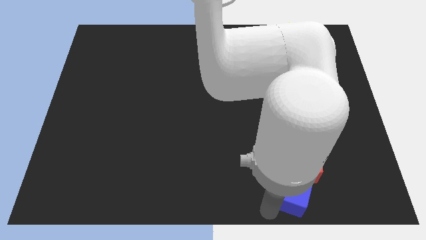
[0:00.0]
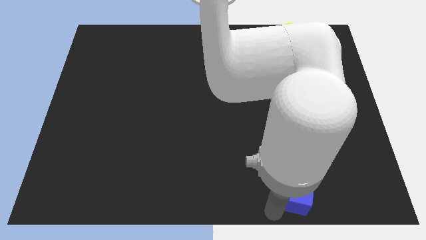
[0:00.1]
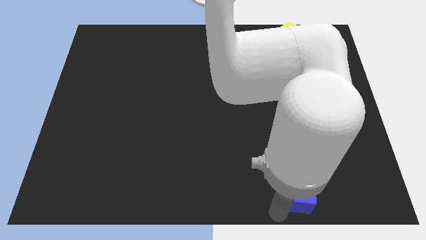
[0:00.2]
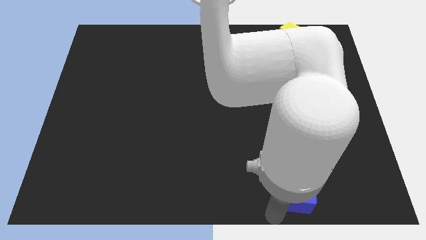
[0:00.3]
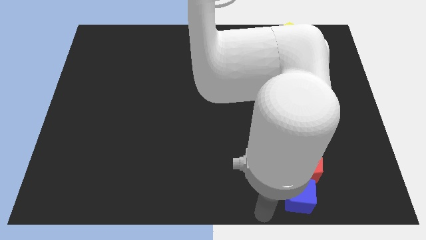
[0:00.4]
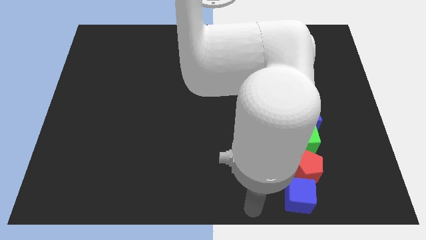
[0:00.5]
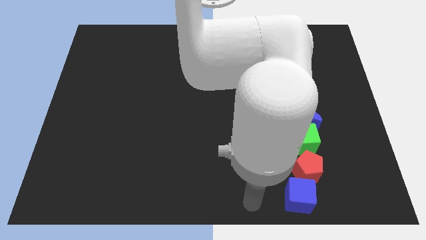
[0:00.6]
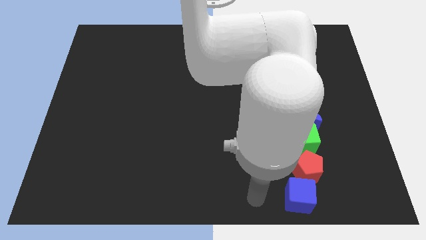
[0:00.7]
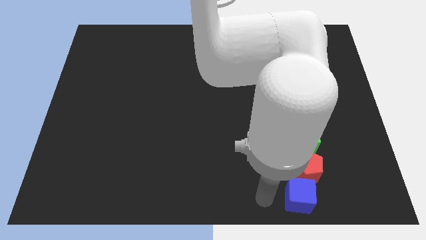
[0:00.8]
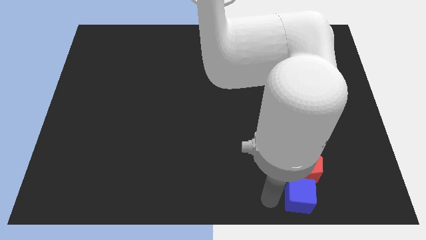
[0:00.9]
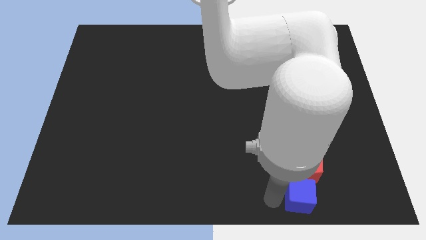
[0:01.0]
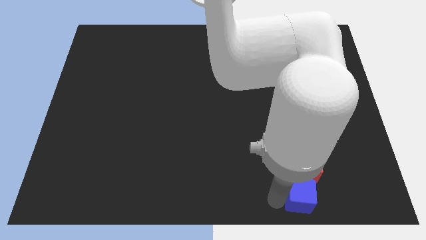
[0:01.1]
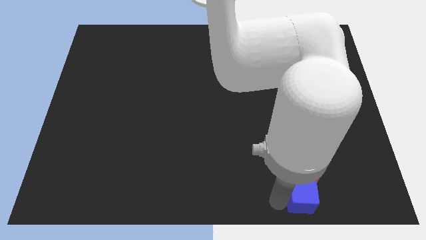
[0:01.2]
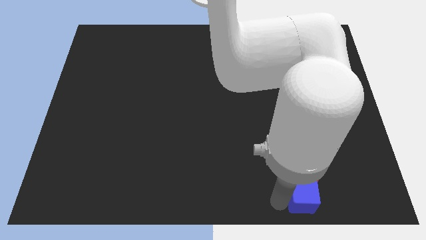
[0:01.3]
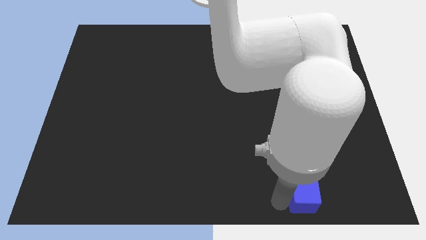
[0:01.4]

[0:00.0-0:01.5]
move blue cube into red pentagon

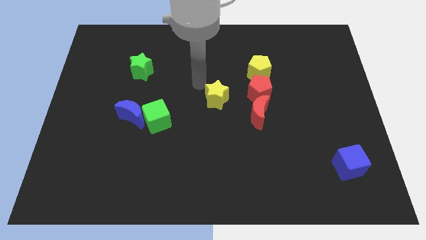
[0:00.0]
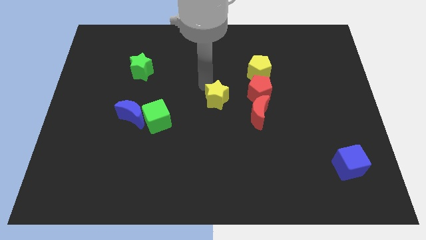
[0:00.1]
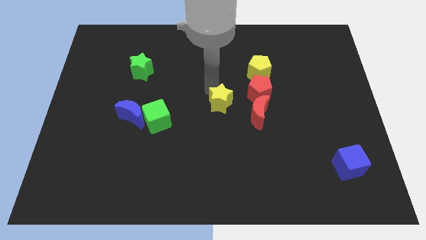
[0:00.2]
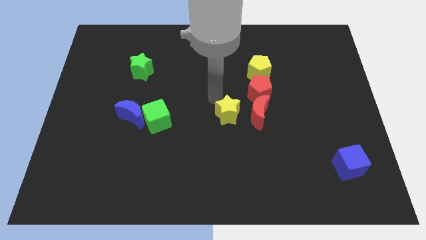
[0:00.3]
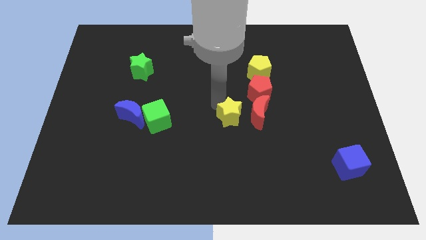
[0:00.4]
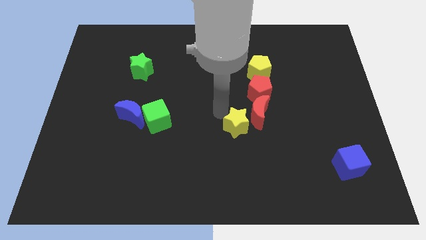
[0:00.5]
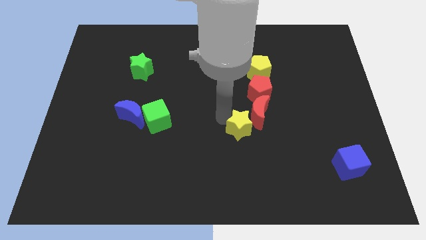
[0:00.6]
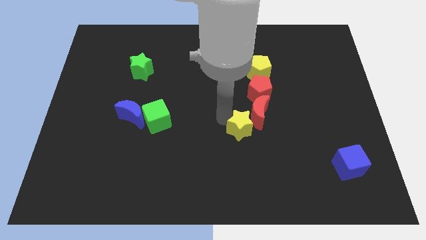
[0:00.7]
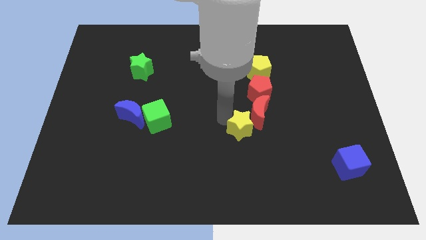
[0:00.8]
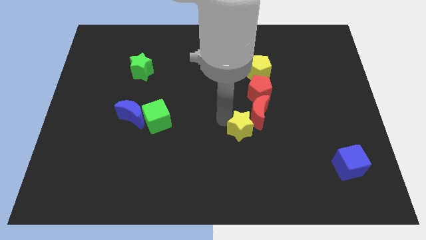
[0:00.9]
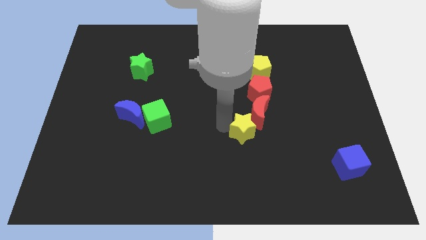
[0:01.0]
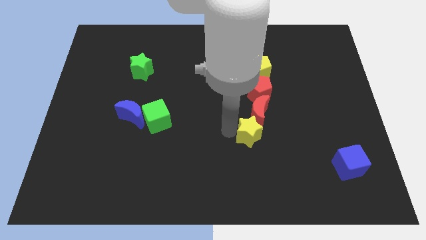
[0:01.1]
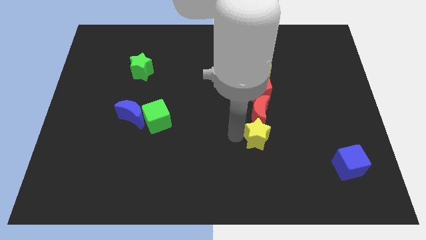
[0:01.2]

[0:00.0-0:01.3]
make the yellow star touch the bottom of the red crescent

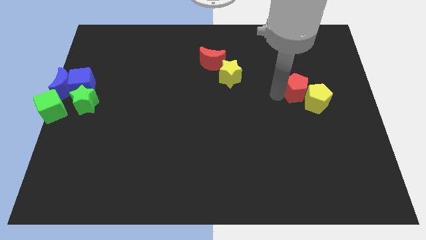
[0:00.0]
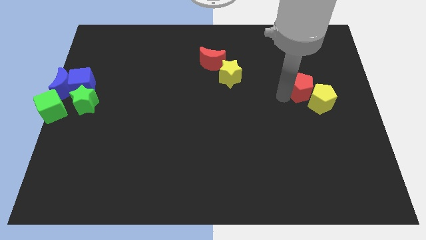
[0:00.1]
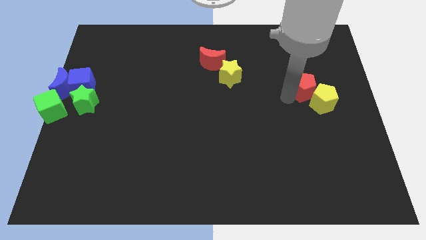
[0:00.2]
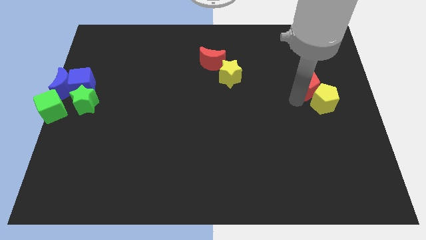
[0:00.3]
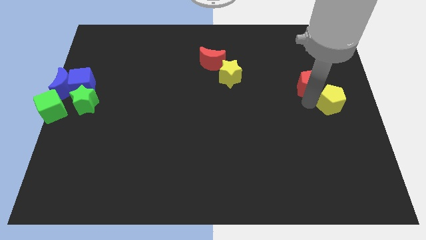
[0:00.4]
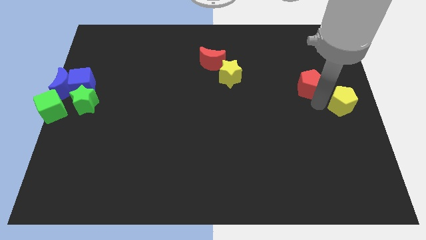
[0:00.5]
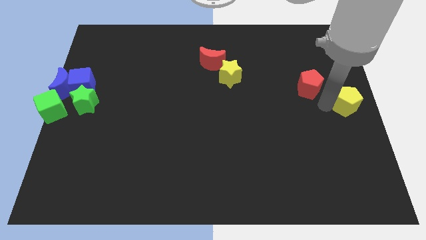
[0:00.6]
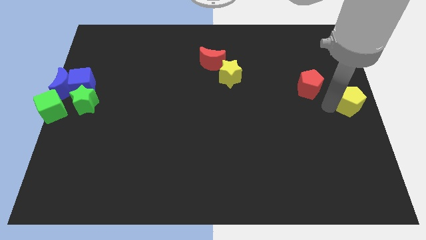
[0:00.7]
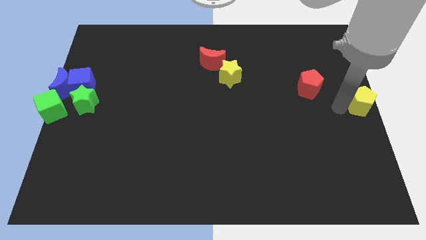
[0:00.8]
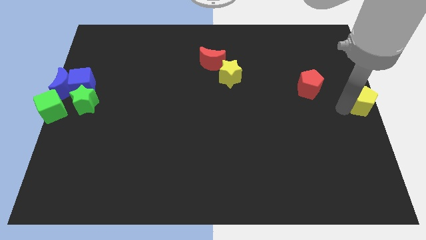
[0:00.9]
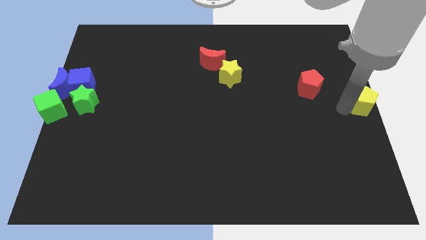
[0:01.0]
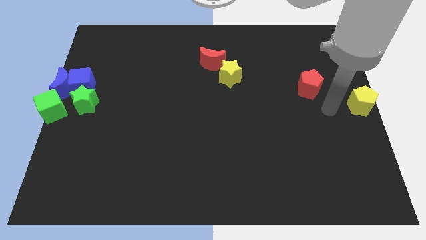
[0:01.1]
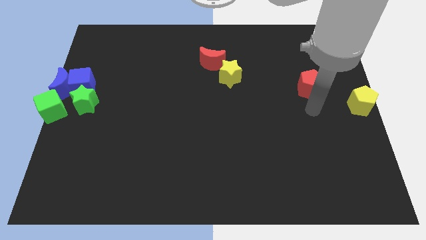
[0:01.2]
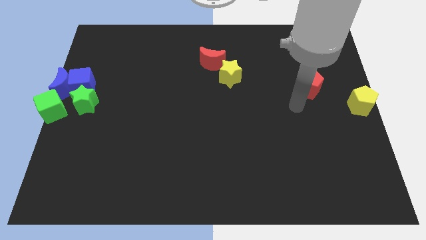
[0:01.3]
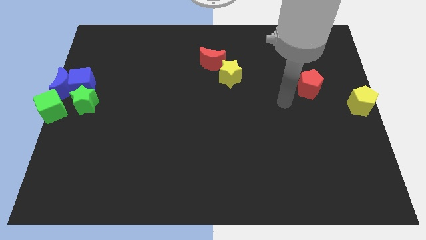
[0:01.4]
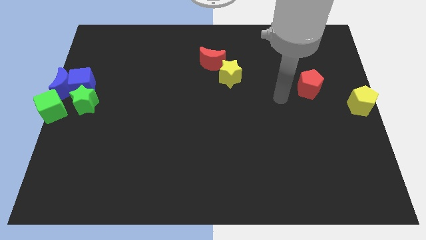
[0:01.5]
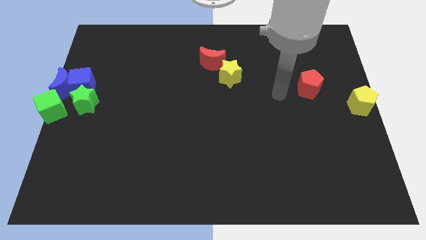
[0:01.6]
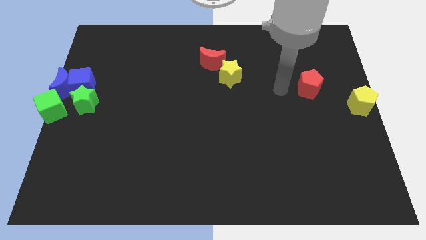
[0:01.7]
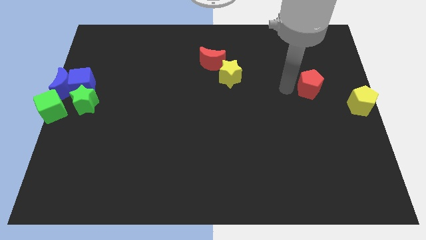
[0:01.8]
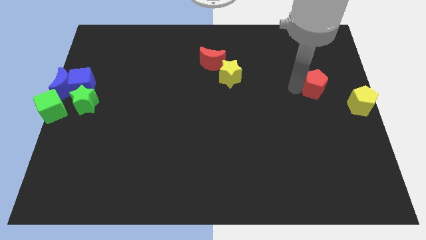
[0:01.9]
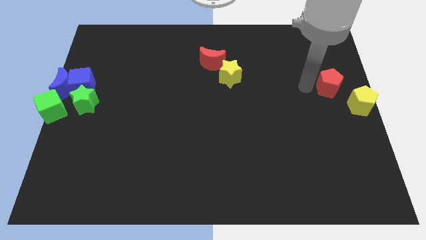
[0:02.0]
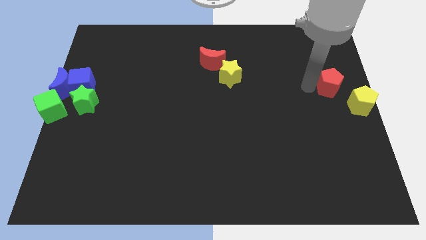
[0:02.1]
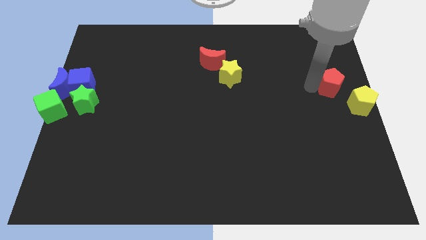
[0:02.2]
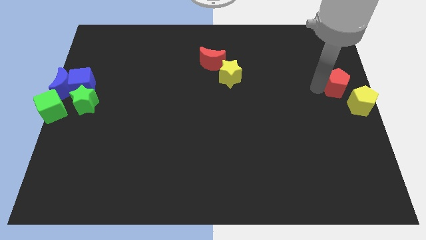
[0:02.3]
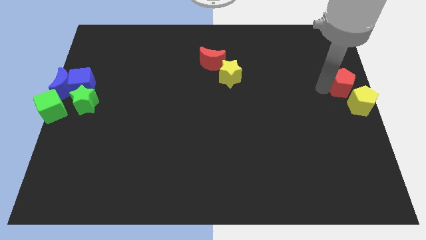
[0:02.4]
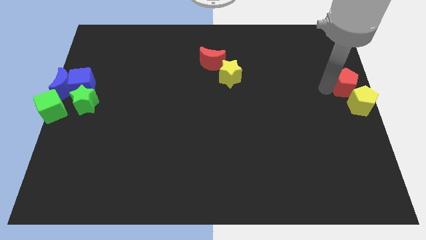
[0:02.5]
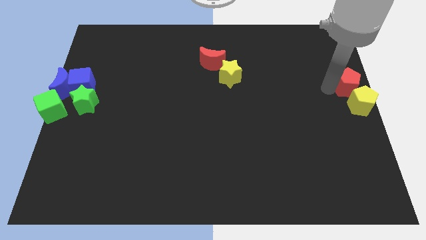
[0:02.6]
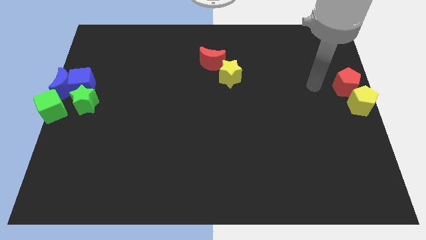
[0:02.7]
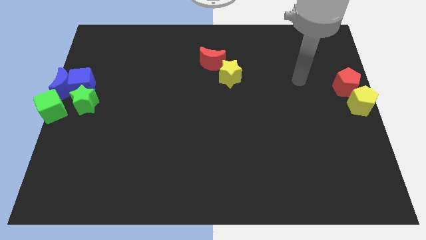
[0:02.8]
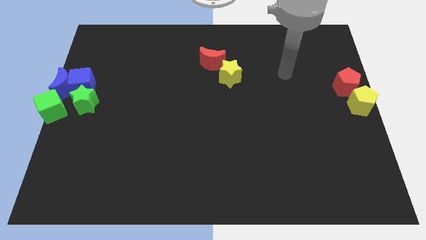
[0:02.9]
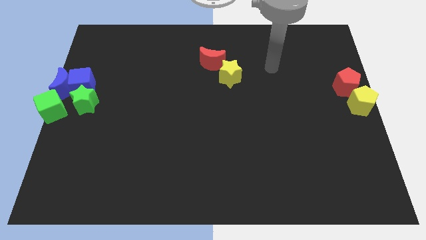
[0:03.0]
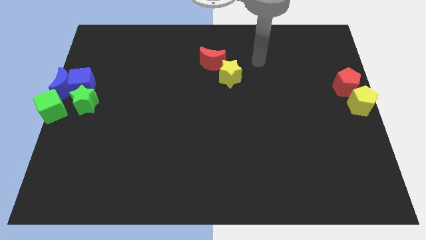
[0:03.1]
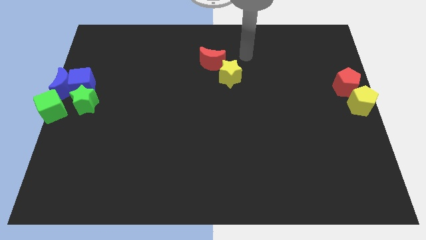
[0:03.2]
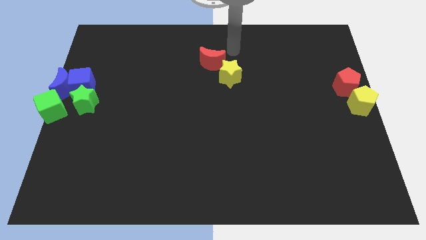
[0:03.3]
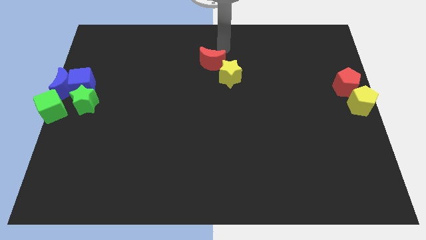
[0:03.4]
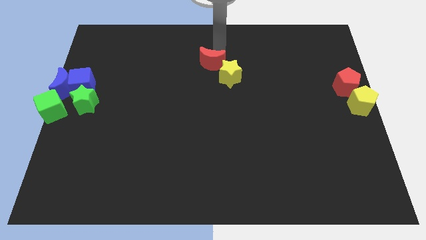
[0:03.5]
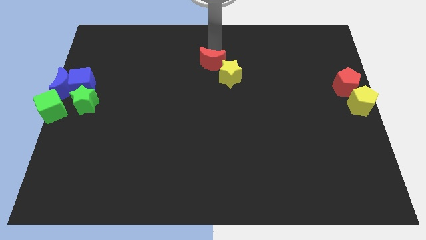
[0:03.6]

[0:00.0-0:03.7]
drag the red pentagon above yellow pentagon

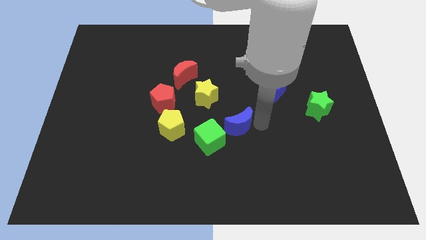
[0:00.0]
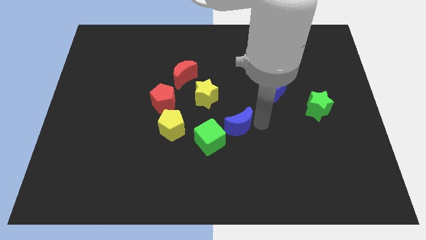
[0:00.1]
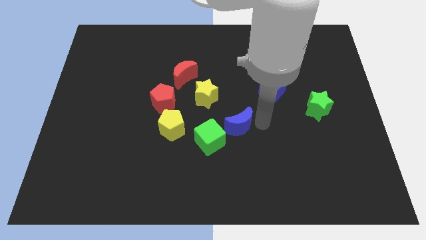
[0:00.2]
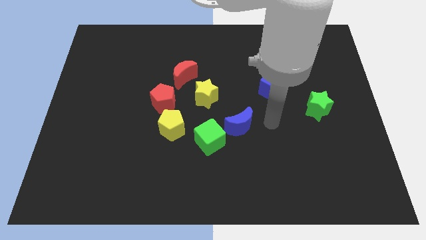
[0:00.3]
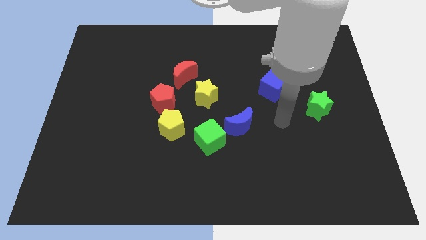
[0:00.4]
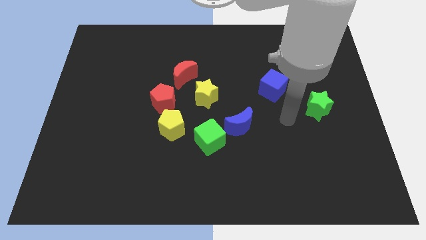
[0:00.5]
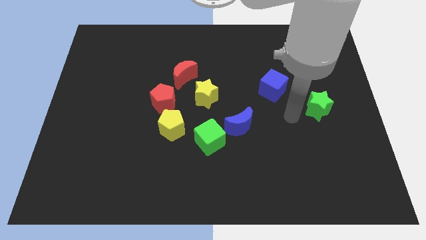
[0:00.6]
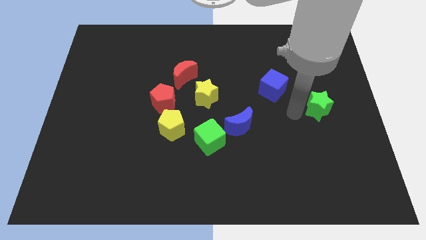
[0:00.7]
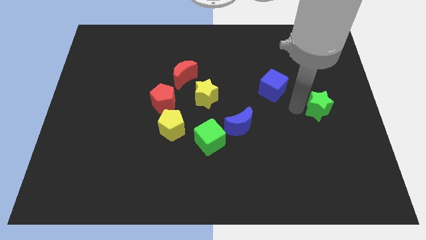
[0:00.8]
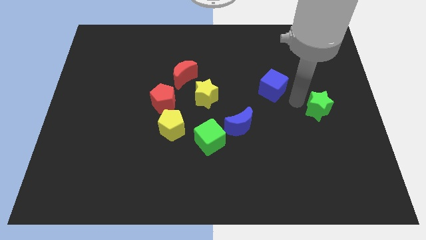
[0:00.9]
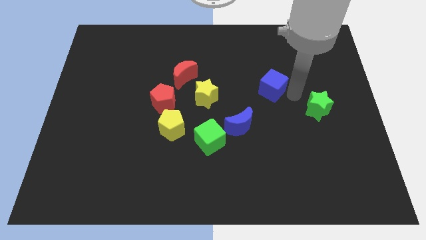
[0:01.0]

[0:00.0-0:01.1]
move arm in between the blue cube and green star

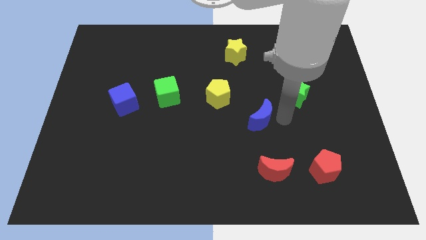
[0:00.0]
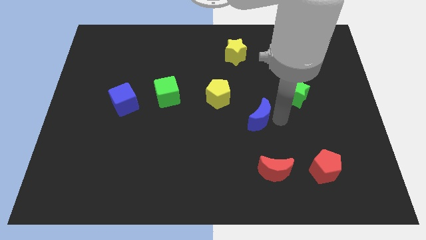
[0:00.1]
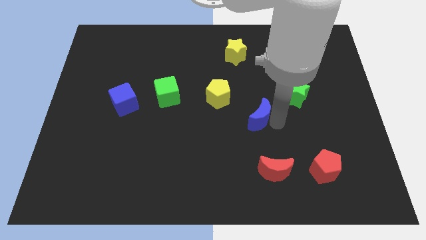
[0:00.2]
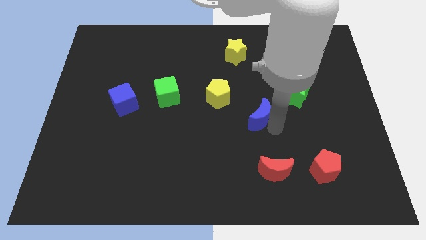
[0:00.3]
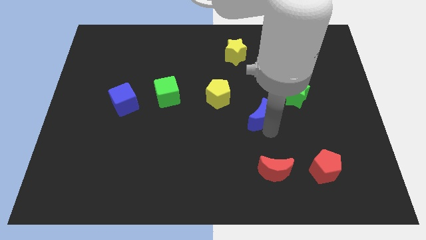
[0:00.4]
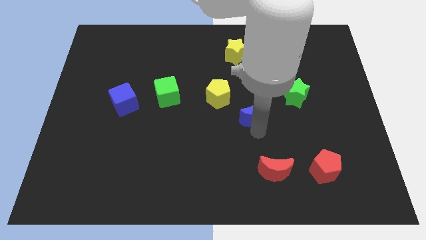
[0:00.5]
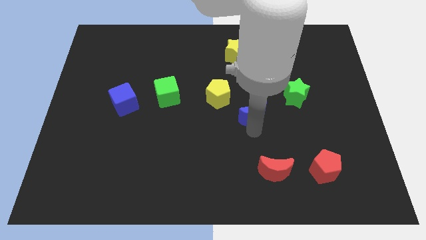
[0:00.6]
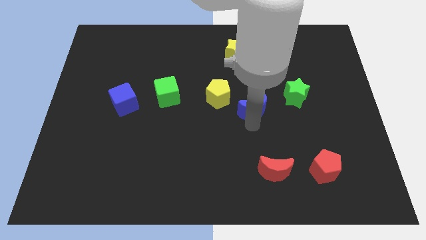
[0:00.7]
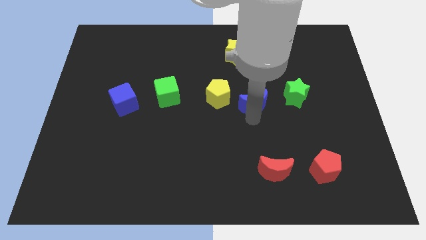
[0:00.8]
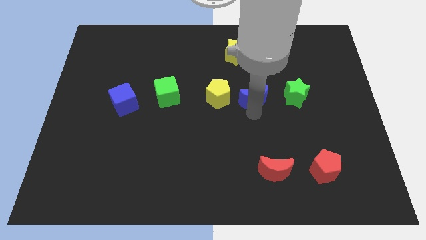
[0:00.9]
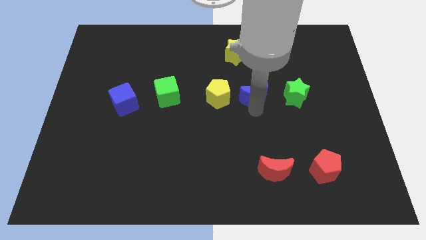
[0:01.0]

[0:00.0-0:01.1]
move blue moon to the right of yellow pentagon
